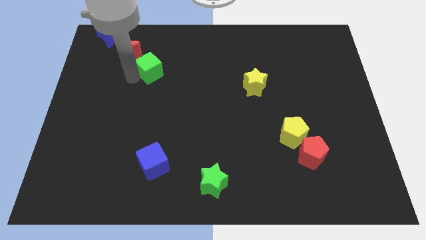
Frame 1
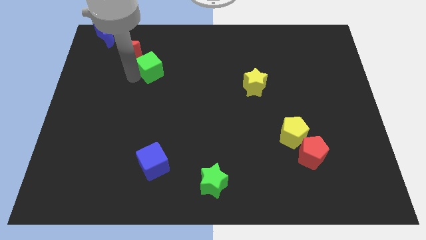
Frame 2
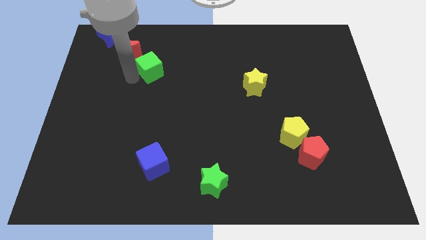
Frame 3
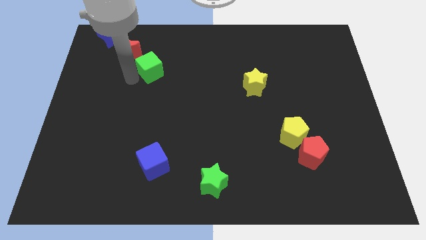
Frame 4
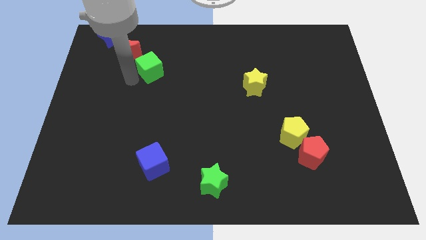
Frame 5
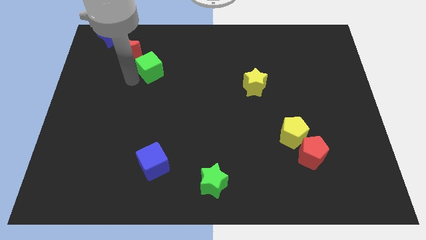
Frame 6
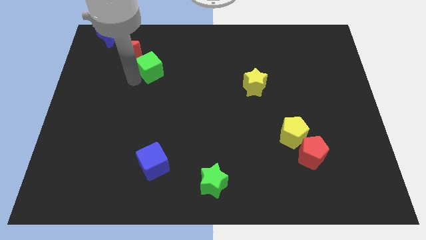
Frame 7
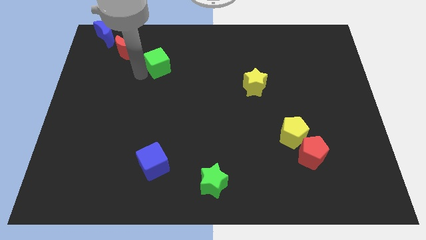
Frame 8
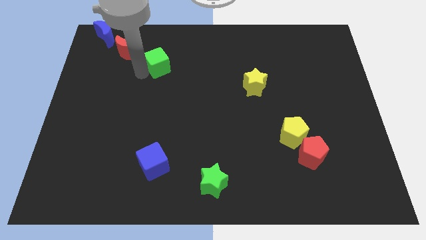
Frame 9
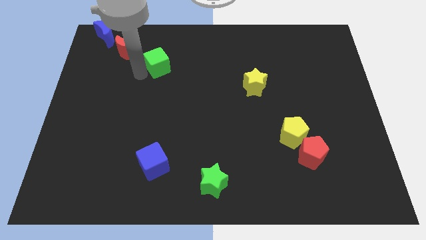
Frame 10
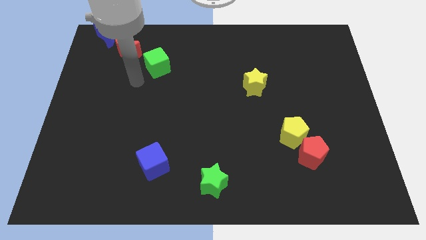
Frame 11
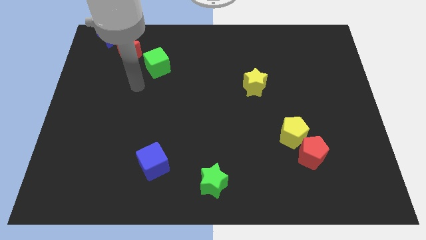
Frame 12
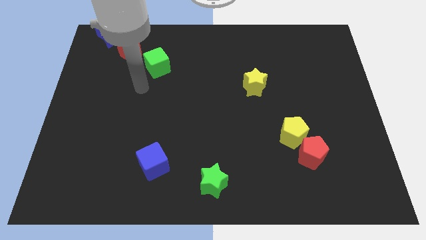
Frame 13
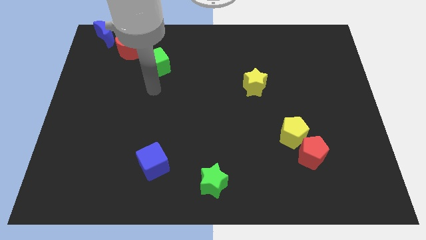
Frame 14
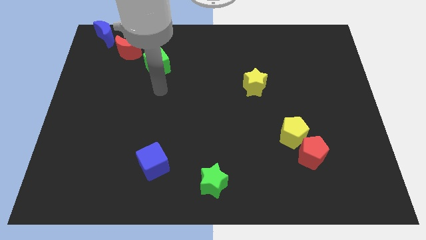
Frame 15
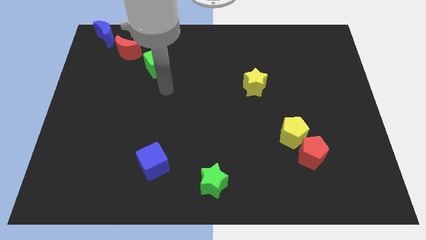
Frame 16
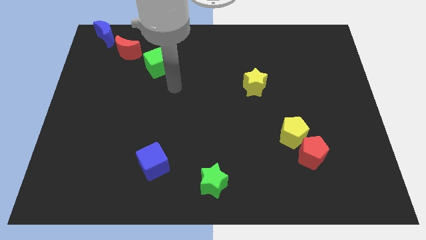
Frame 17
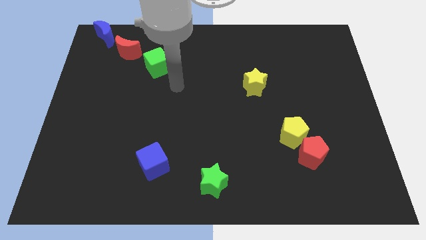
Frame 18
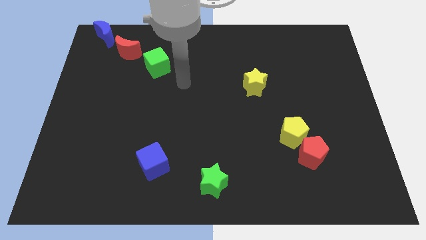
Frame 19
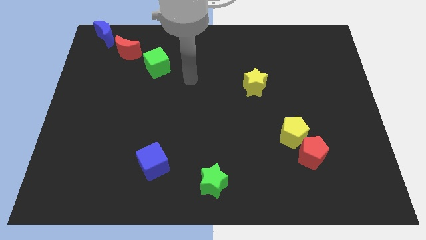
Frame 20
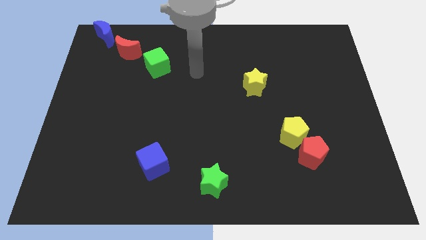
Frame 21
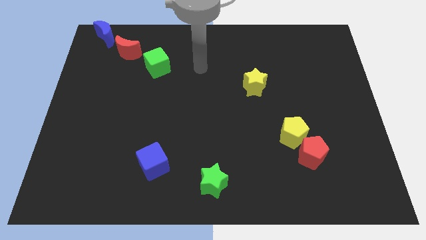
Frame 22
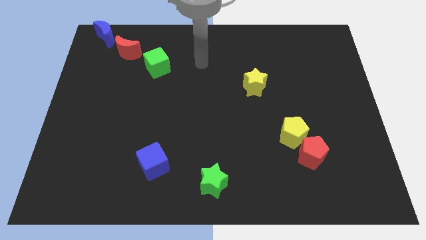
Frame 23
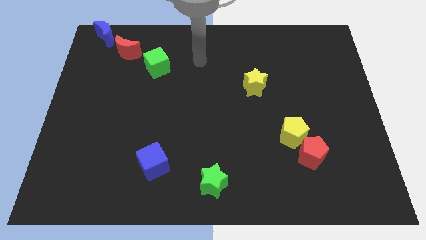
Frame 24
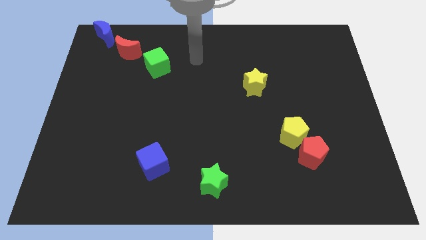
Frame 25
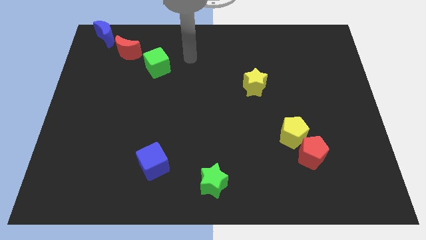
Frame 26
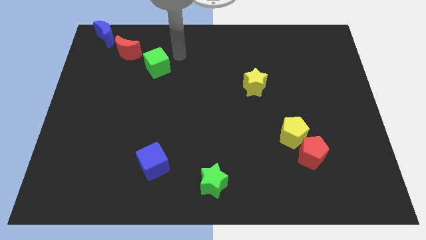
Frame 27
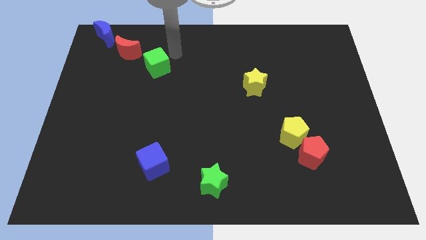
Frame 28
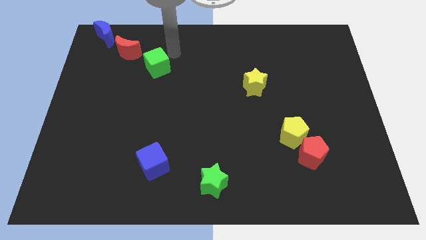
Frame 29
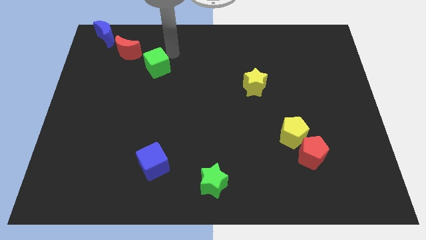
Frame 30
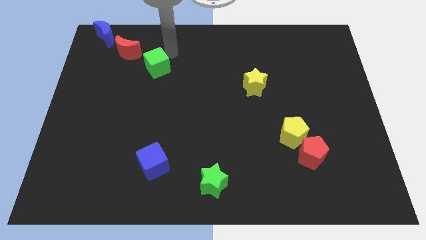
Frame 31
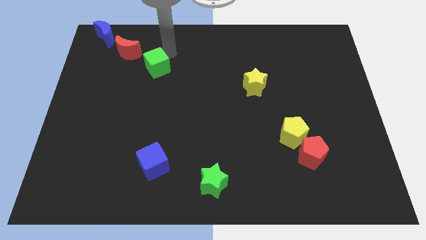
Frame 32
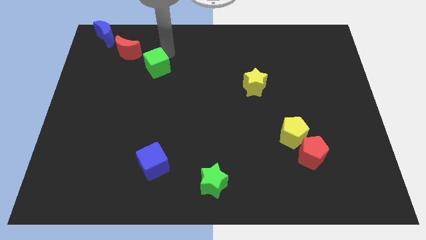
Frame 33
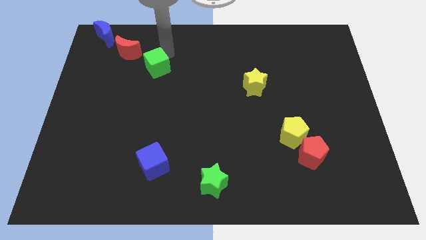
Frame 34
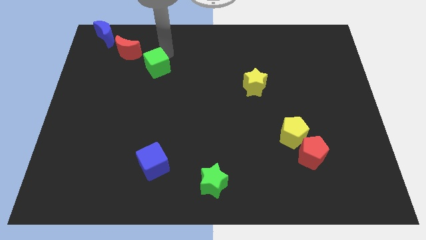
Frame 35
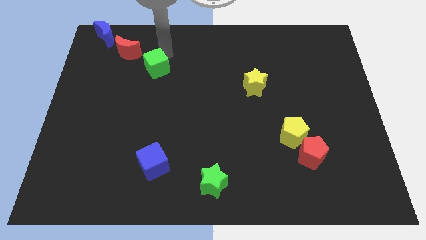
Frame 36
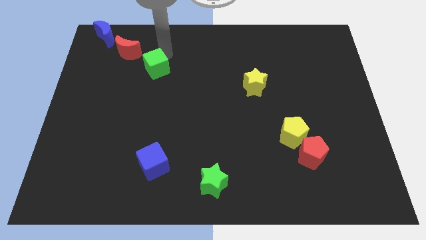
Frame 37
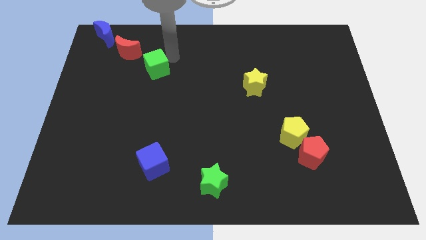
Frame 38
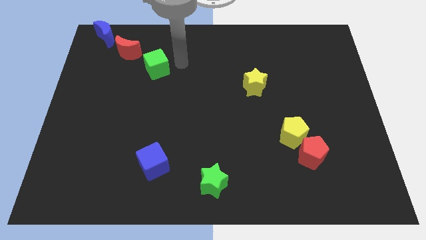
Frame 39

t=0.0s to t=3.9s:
adjust green cube vertically above blue cube

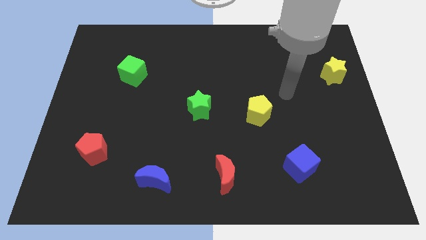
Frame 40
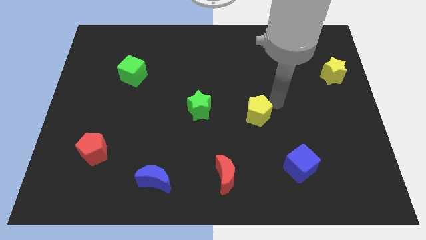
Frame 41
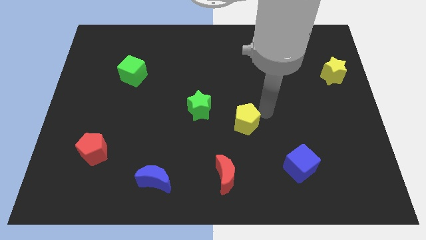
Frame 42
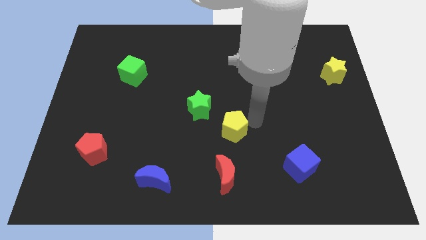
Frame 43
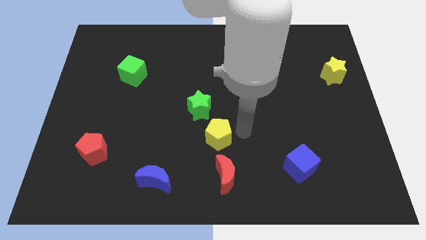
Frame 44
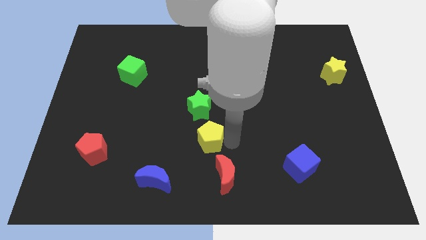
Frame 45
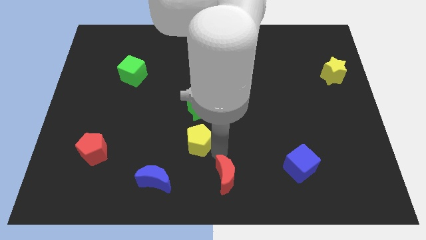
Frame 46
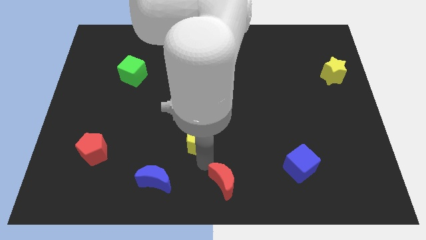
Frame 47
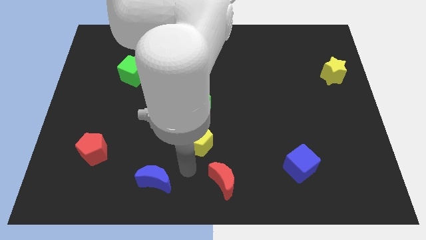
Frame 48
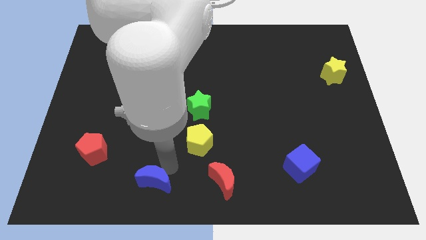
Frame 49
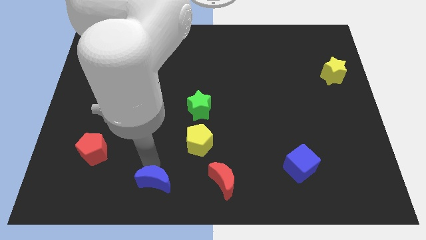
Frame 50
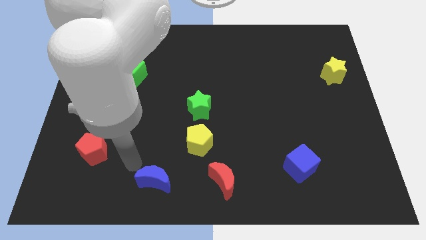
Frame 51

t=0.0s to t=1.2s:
push the yellow pentagon to the right of red pentagon

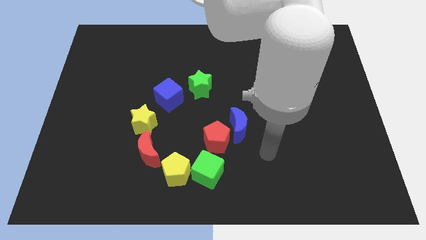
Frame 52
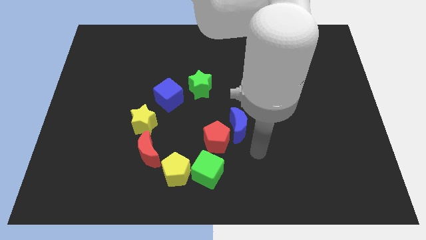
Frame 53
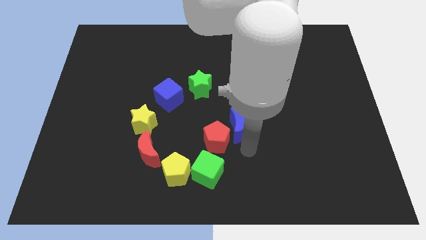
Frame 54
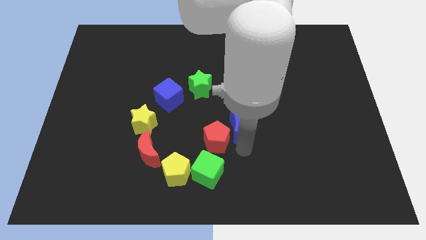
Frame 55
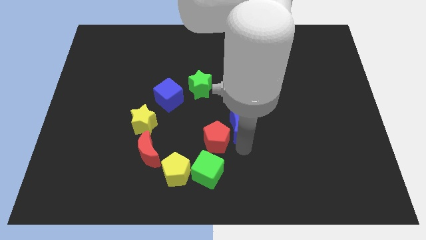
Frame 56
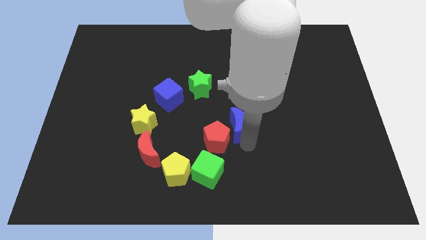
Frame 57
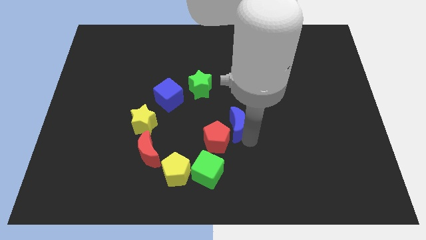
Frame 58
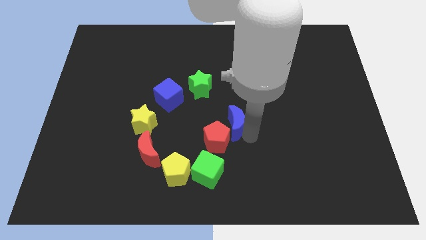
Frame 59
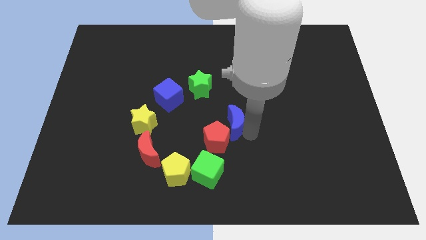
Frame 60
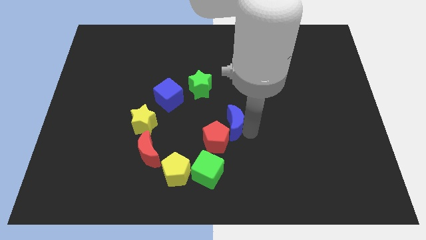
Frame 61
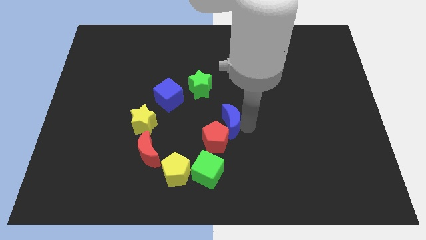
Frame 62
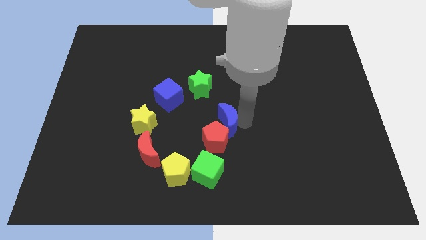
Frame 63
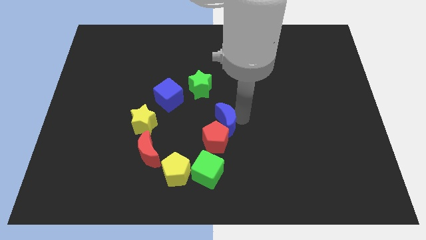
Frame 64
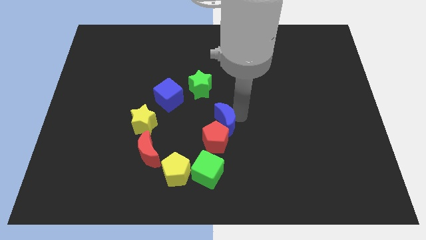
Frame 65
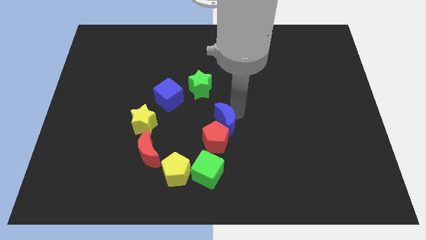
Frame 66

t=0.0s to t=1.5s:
move the blue crescent towards the red pentagon

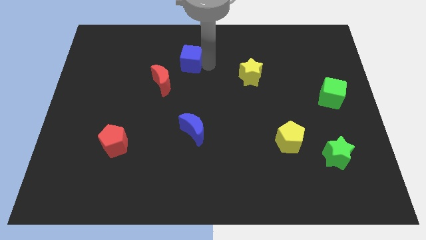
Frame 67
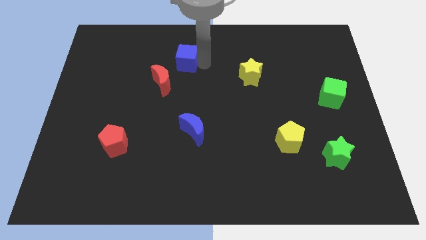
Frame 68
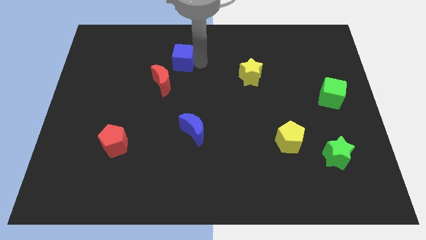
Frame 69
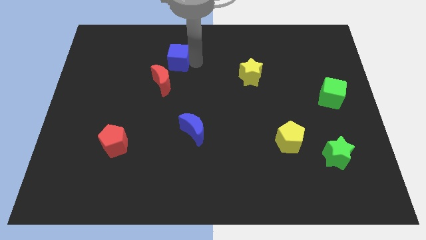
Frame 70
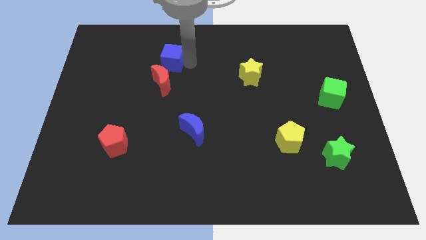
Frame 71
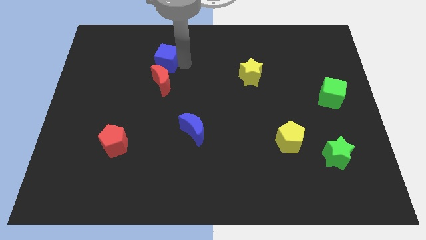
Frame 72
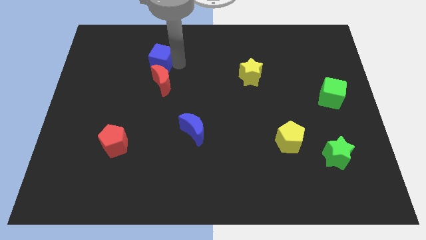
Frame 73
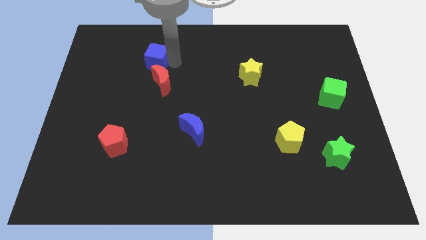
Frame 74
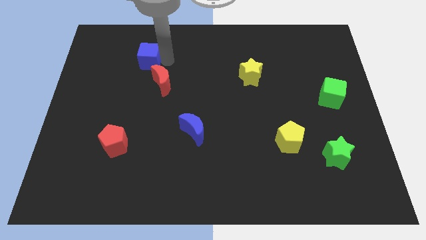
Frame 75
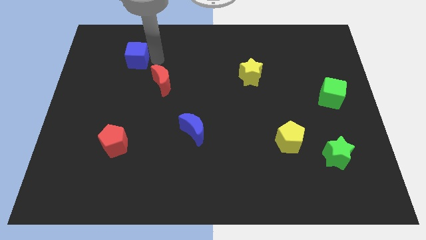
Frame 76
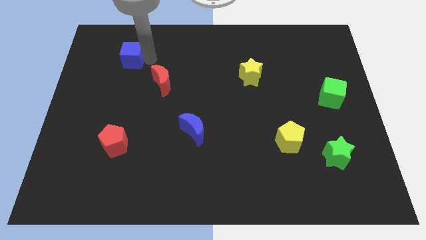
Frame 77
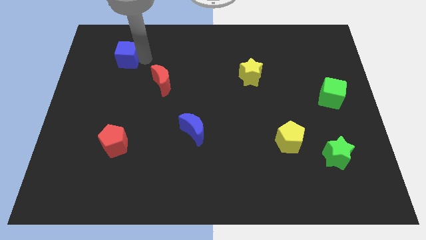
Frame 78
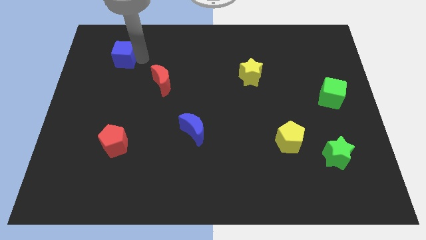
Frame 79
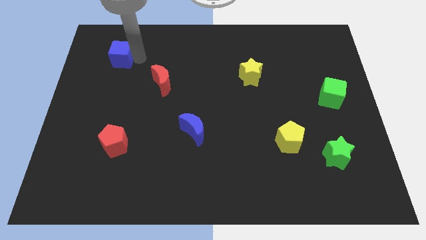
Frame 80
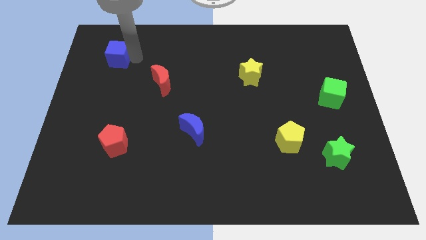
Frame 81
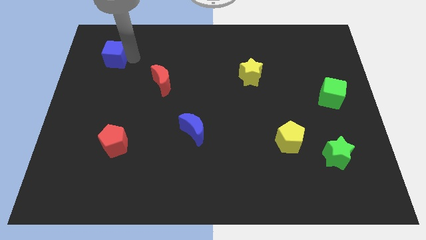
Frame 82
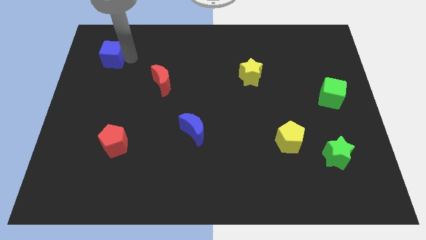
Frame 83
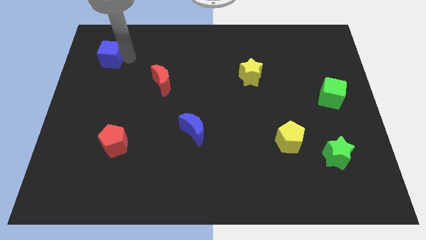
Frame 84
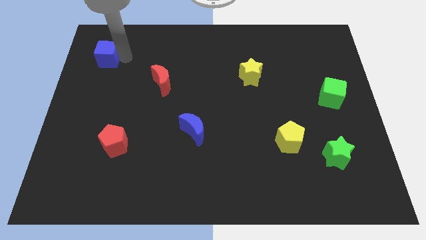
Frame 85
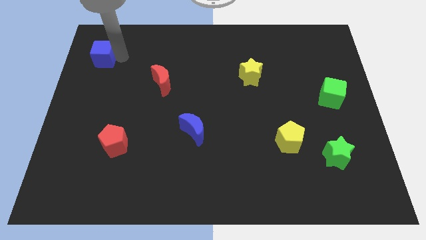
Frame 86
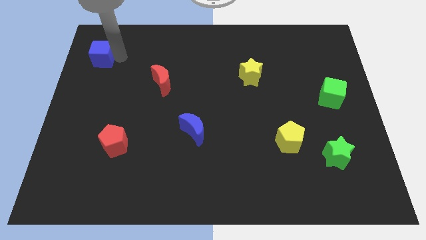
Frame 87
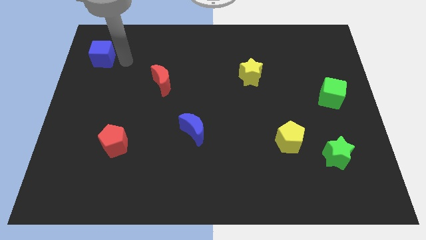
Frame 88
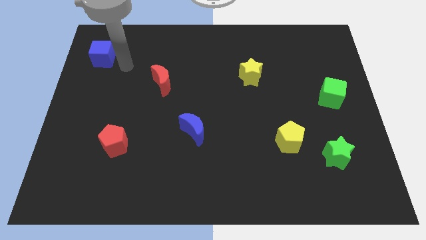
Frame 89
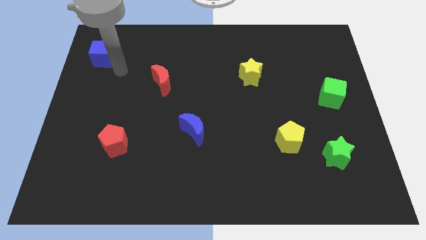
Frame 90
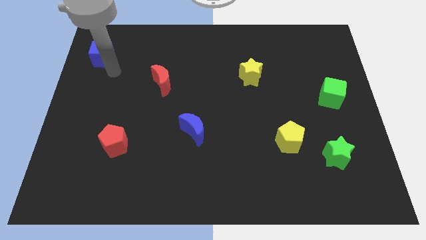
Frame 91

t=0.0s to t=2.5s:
place the blue cube diagonal above the red pentagon
